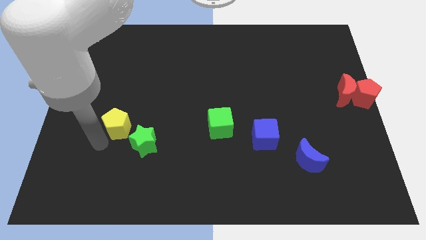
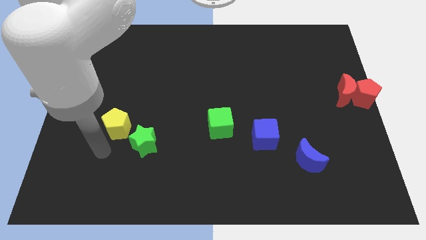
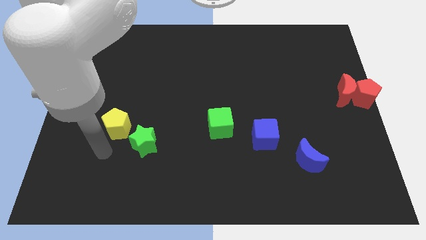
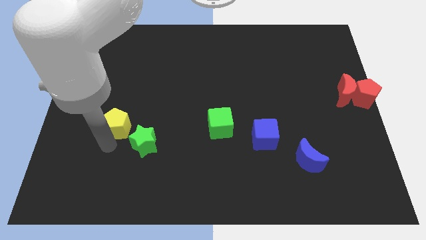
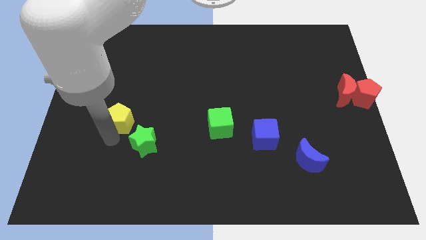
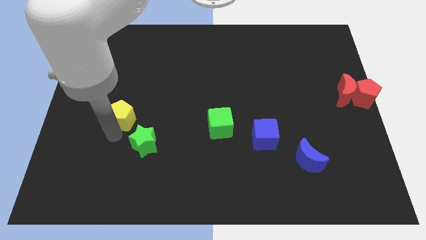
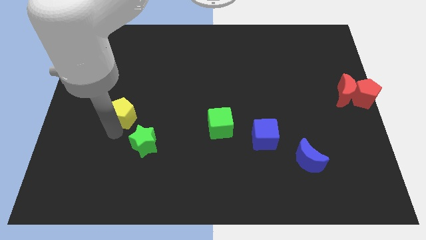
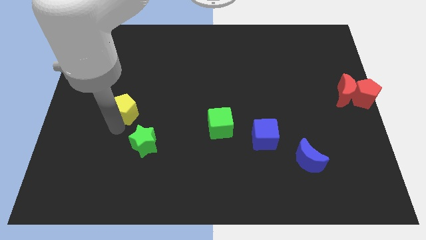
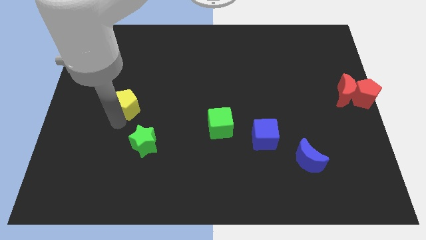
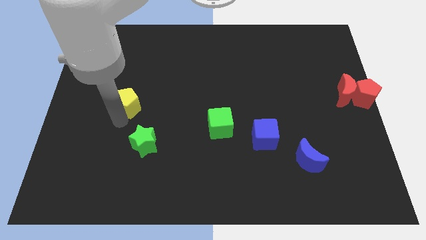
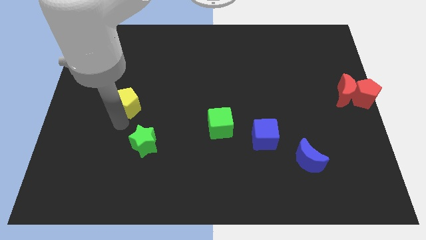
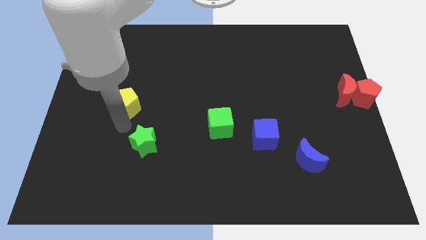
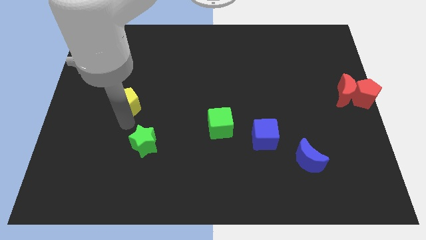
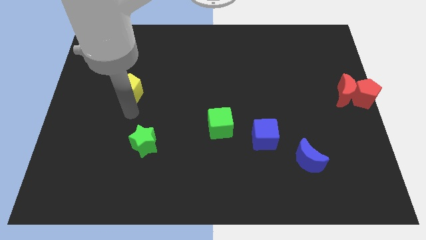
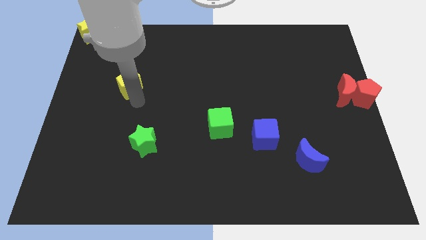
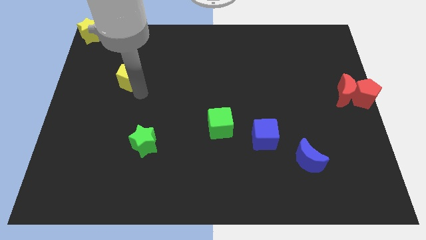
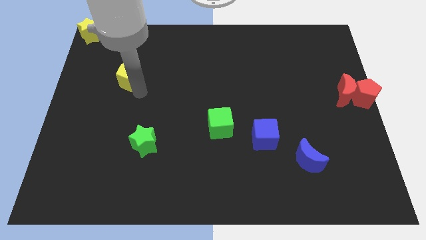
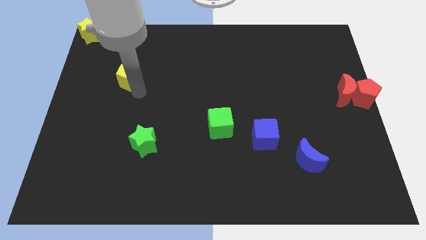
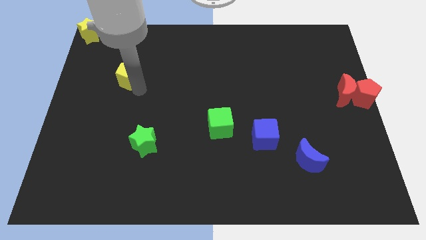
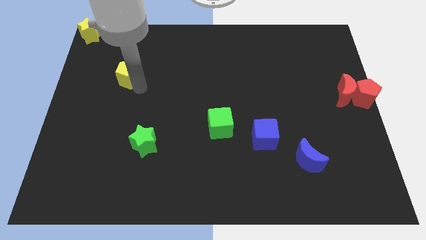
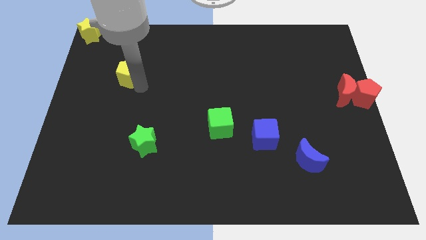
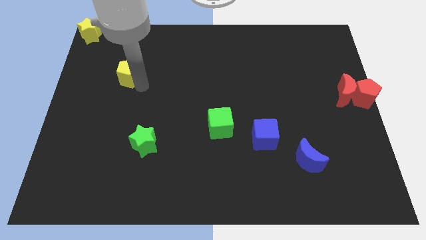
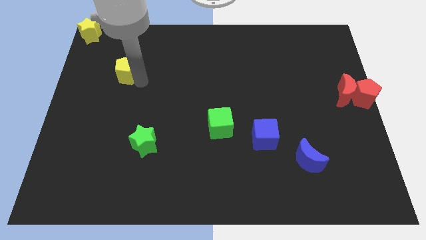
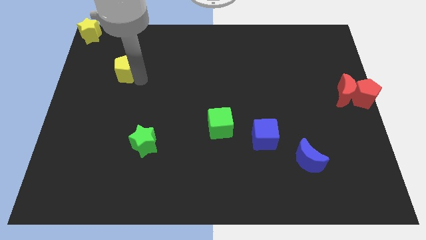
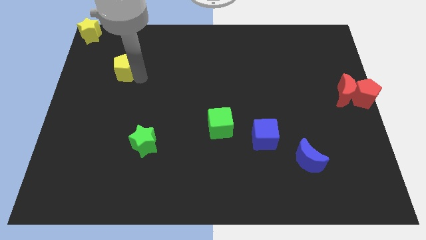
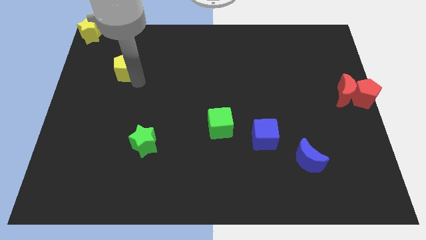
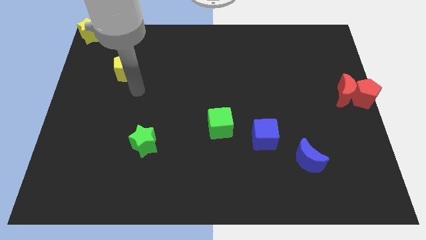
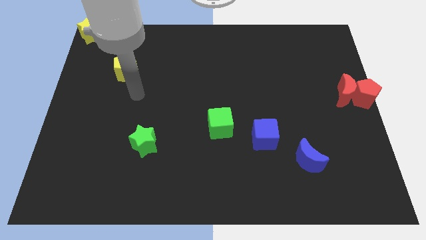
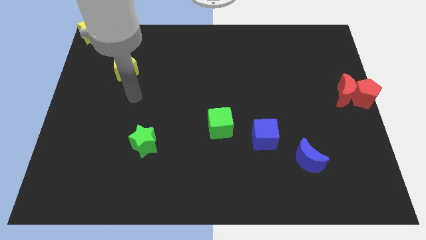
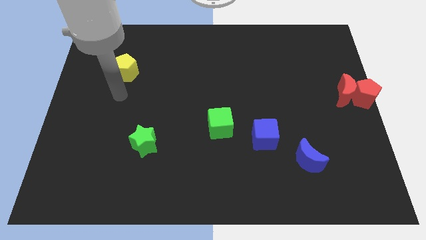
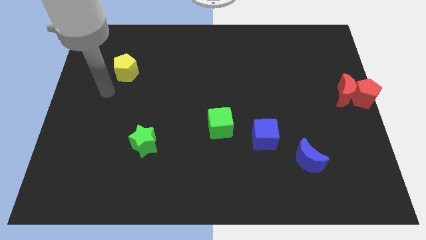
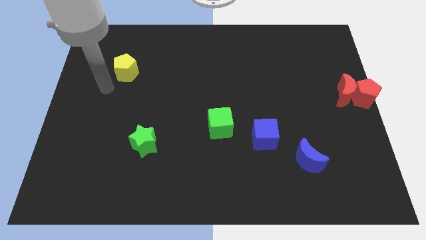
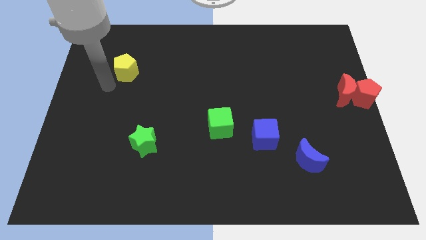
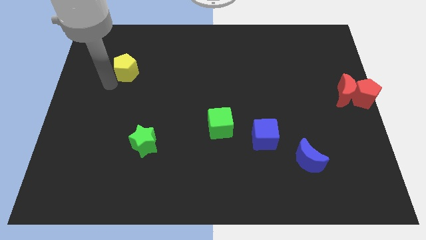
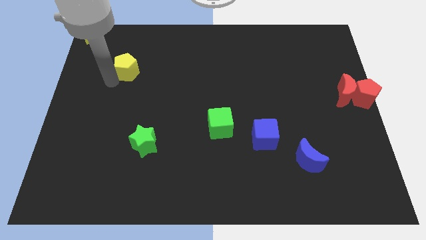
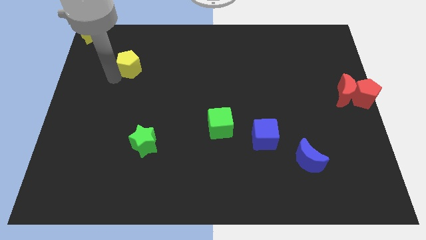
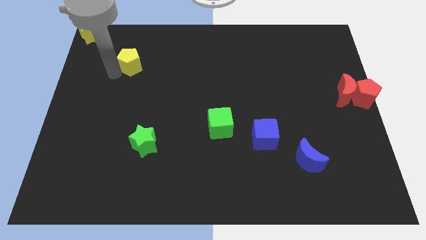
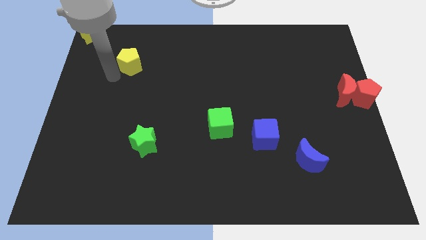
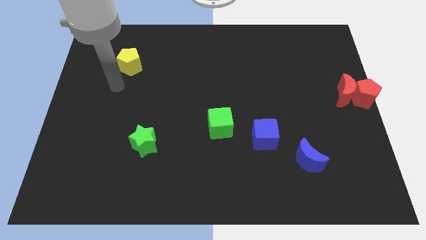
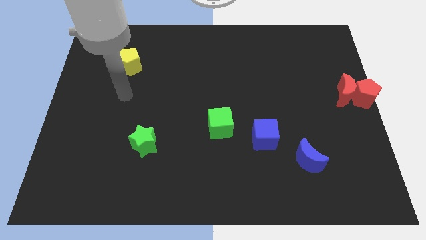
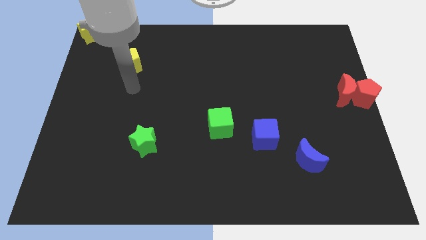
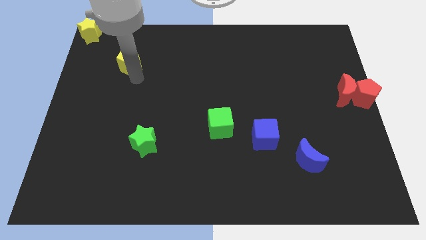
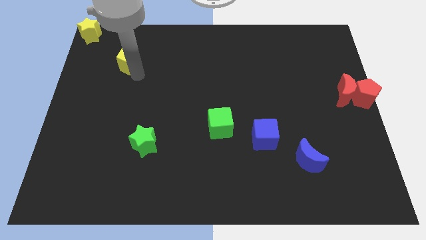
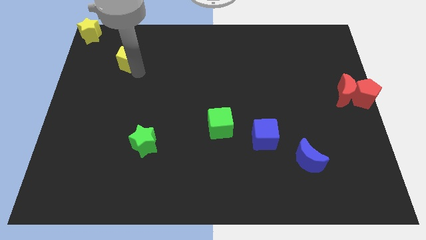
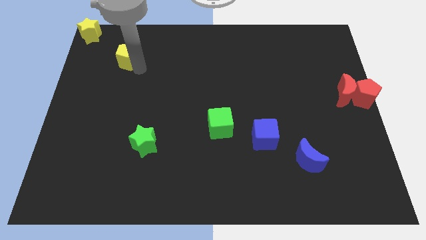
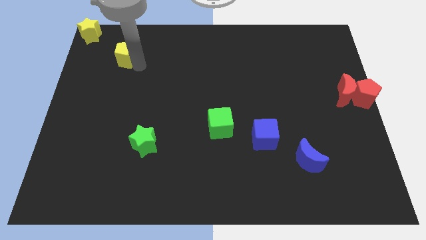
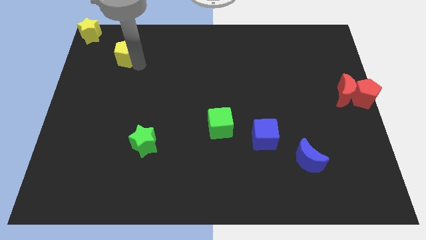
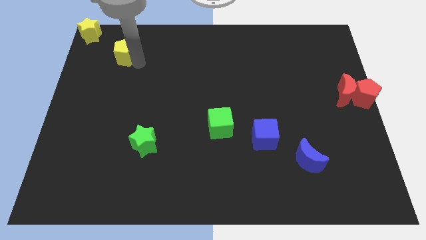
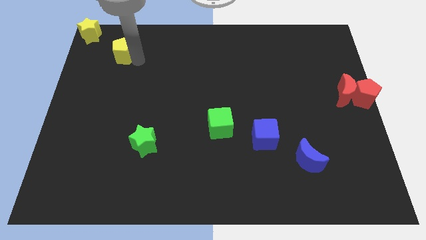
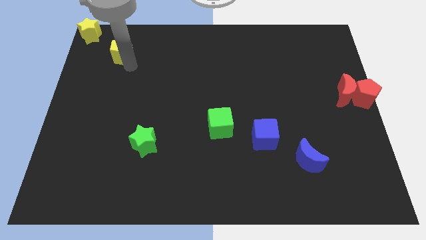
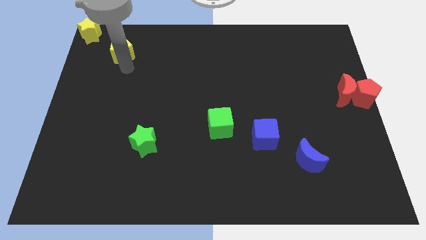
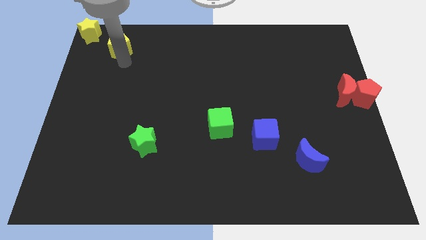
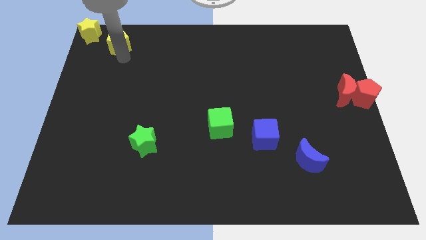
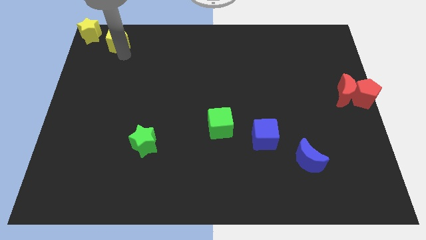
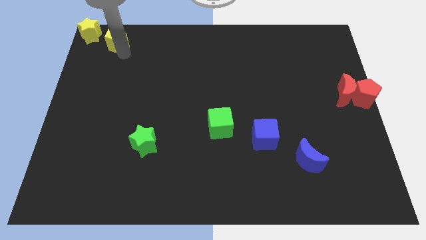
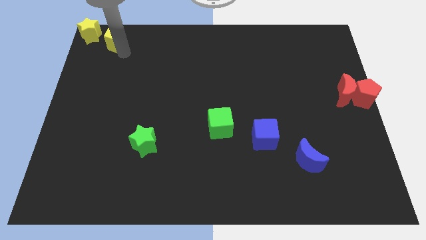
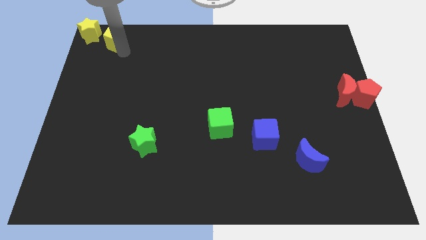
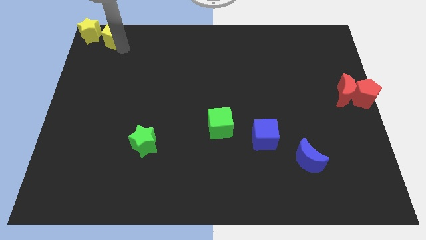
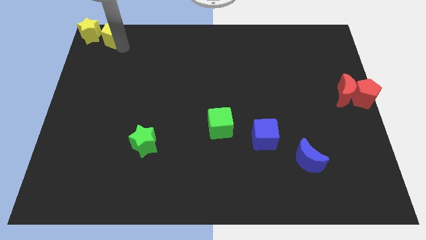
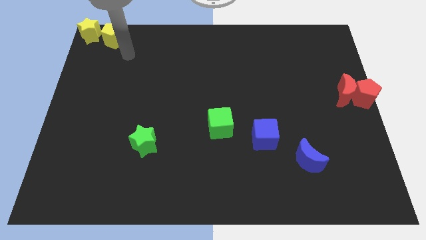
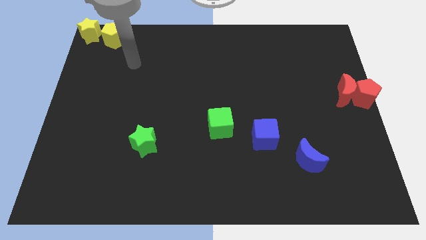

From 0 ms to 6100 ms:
move yellow pentagon to the right of yellow star

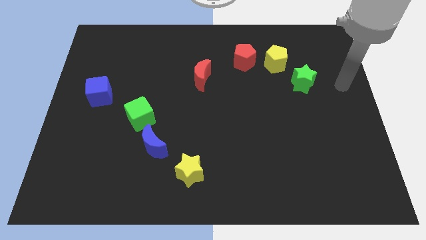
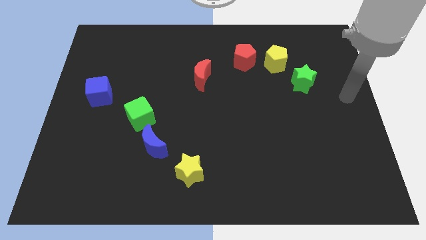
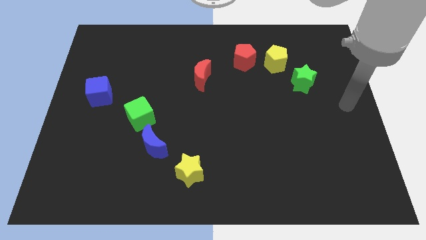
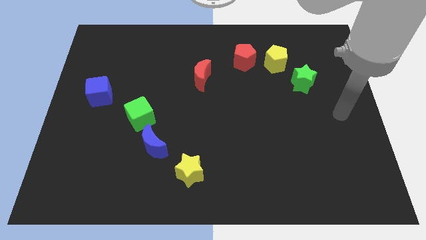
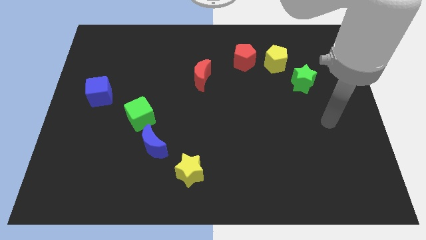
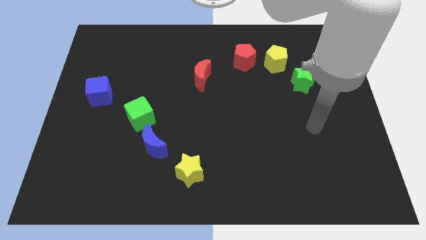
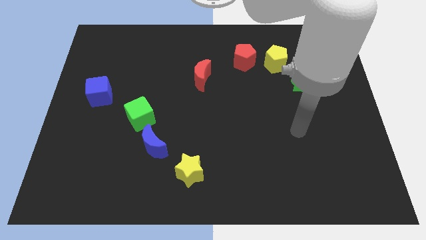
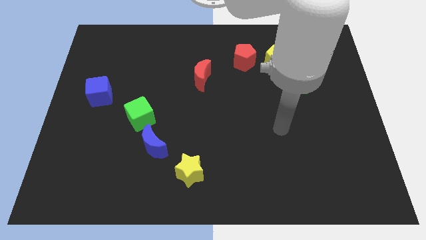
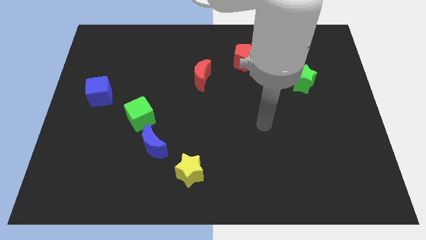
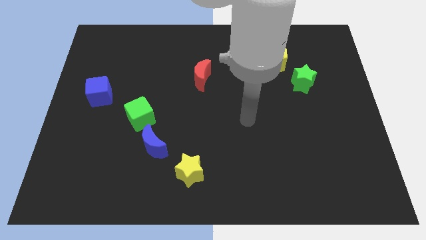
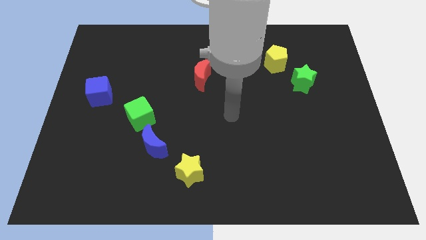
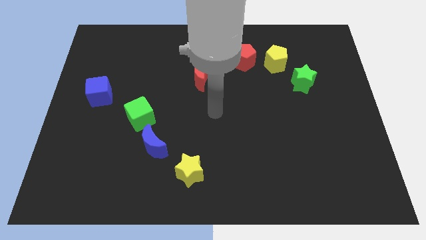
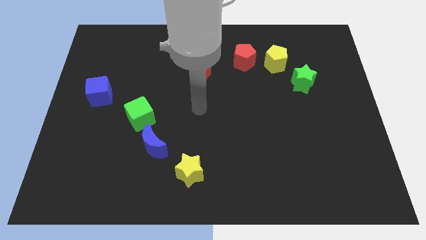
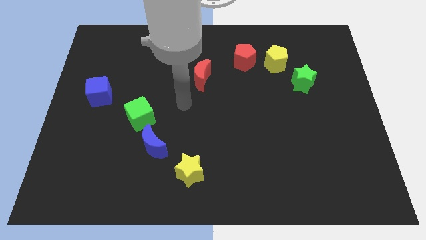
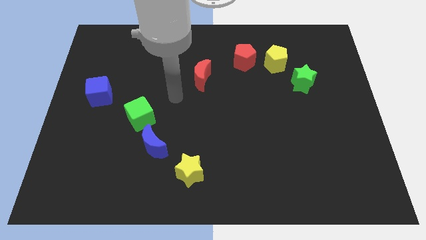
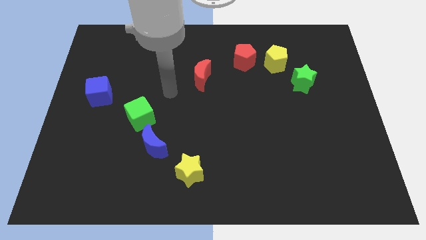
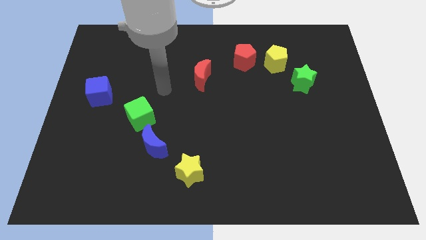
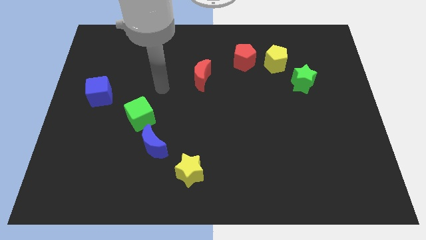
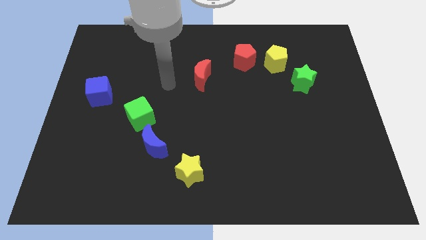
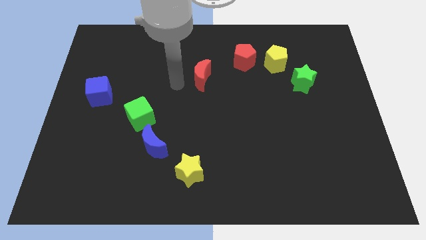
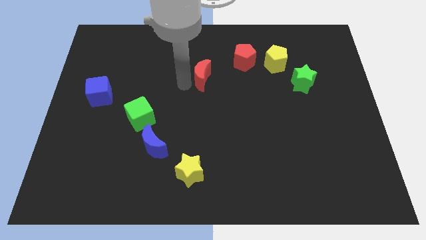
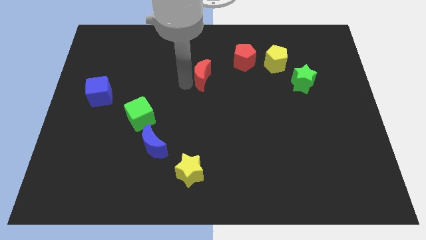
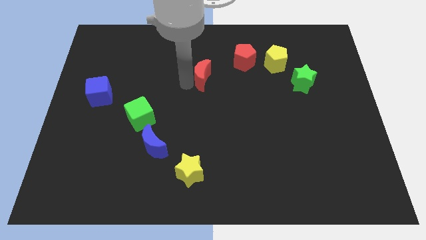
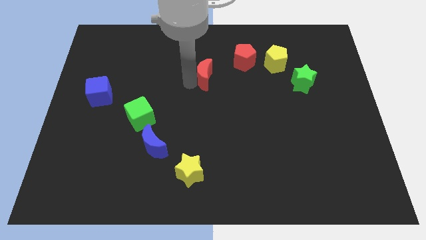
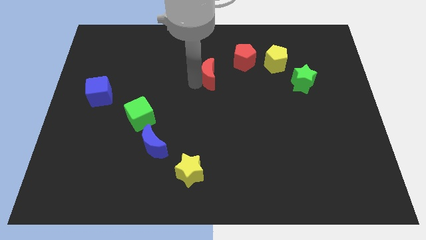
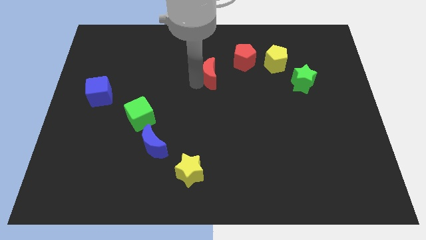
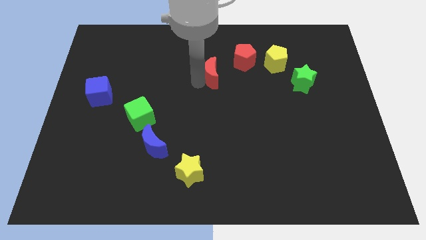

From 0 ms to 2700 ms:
move the red crescent slightly to the right
